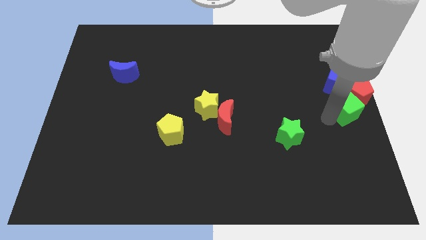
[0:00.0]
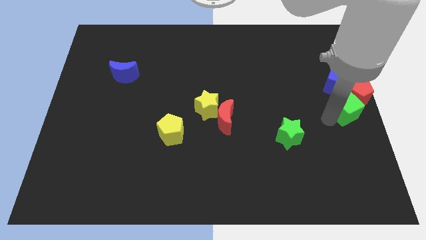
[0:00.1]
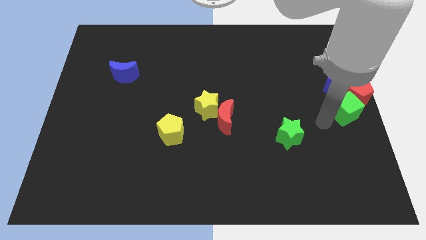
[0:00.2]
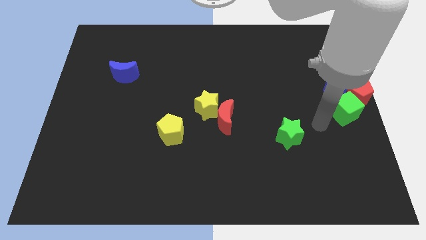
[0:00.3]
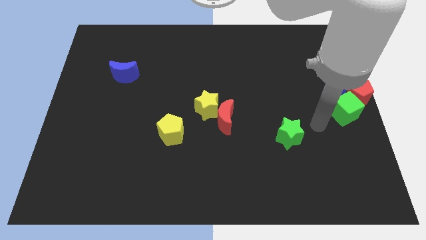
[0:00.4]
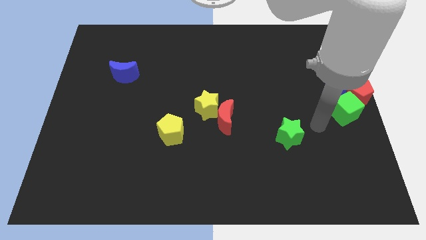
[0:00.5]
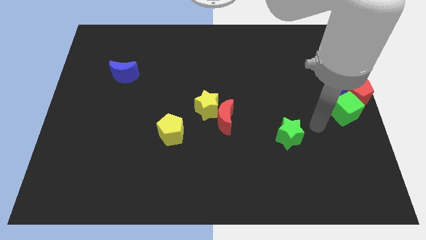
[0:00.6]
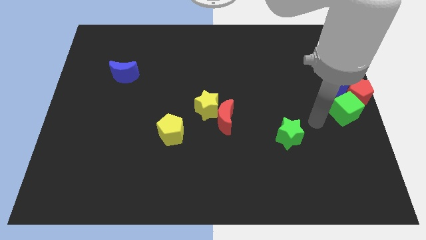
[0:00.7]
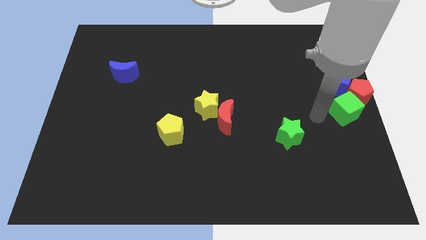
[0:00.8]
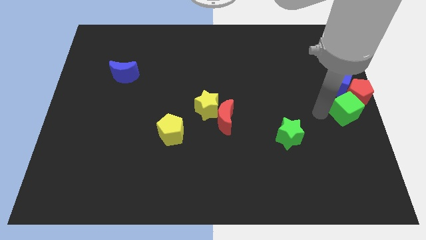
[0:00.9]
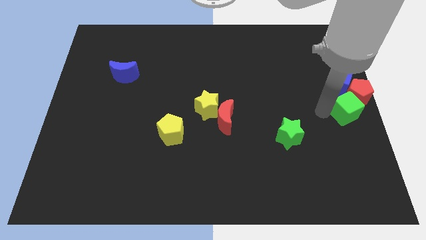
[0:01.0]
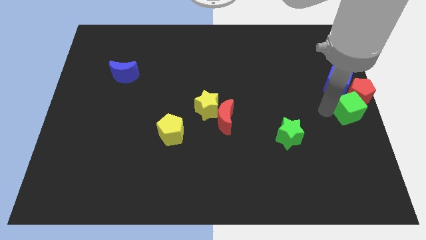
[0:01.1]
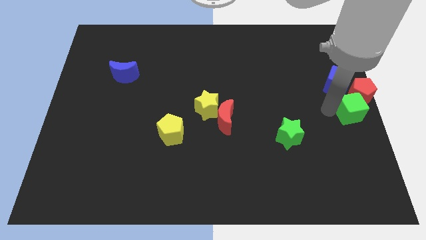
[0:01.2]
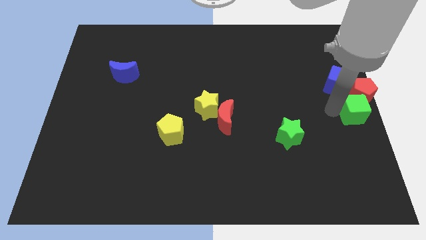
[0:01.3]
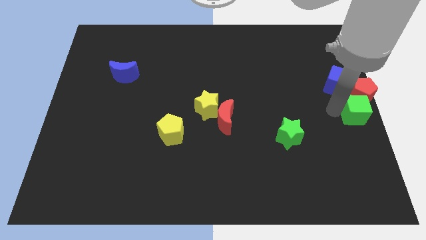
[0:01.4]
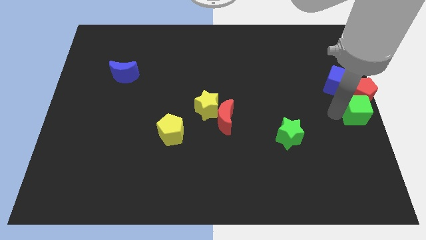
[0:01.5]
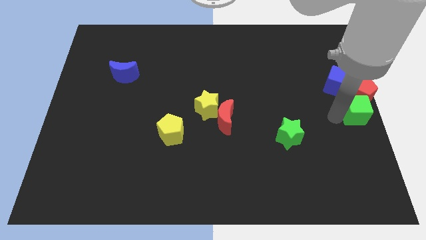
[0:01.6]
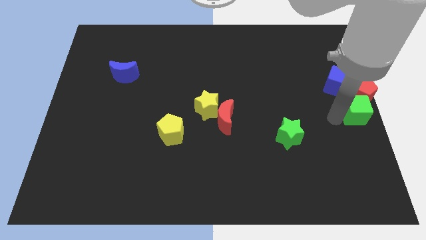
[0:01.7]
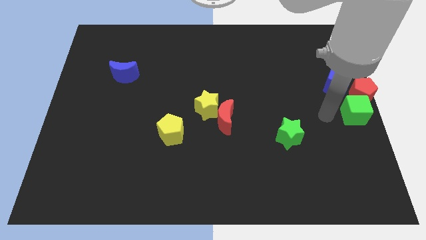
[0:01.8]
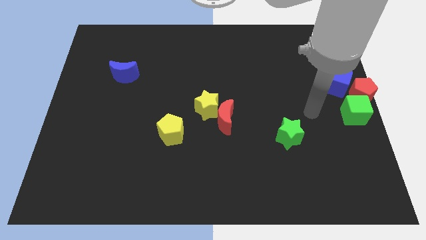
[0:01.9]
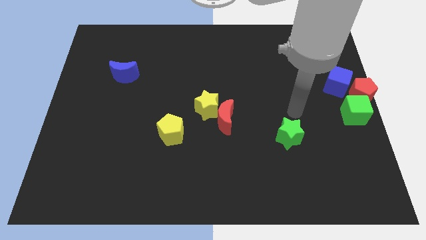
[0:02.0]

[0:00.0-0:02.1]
move green cube close to red pentagon

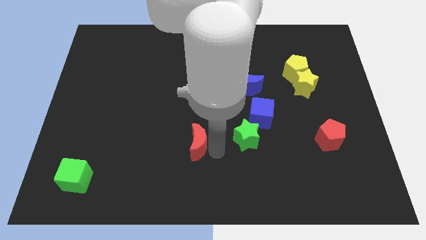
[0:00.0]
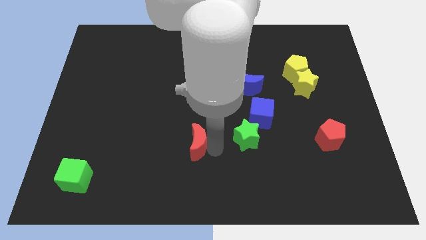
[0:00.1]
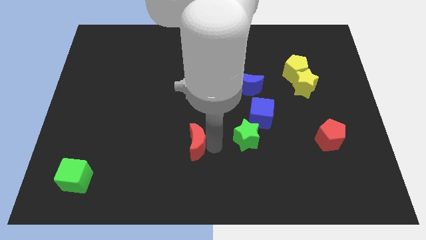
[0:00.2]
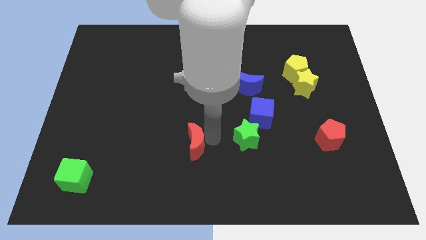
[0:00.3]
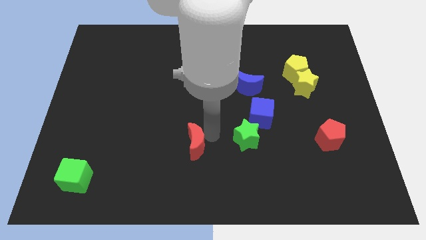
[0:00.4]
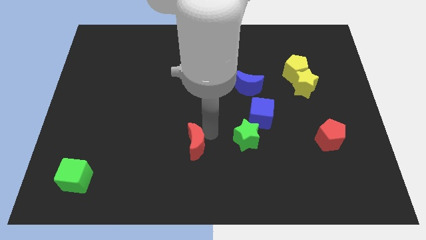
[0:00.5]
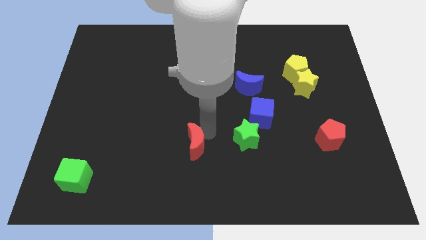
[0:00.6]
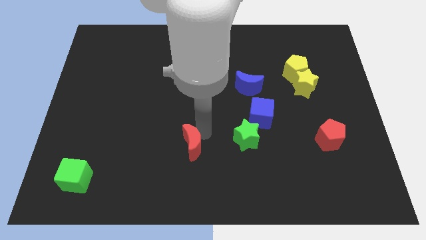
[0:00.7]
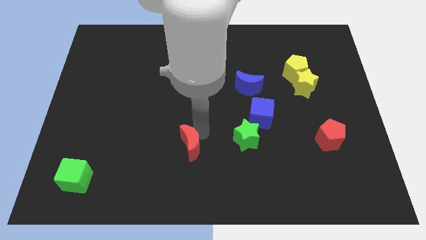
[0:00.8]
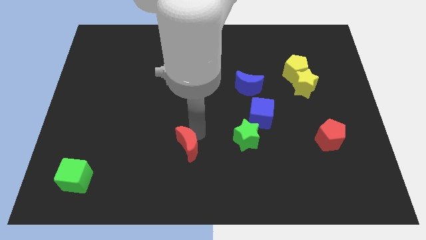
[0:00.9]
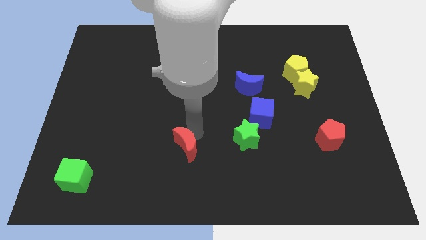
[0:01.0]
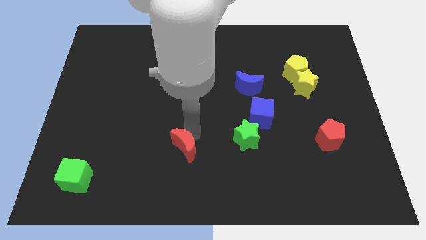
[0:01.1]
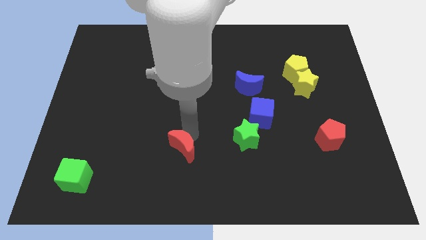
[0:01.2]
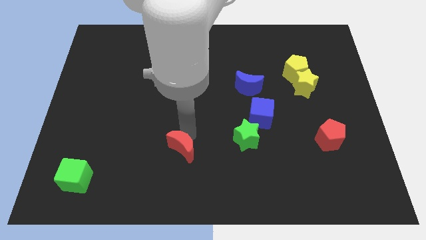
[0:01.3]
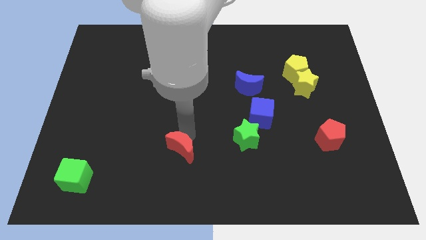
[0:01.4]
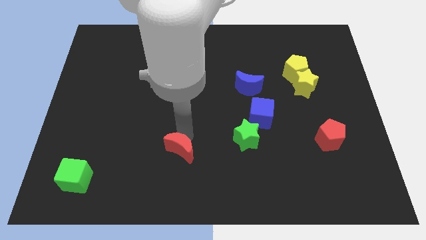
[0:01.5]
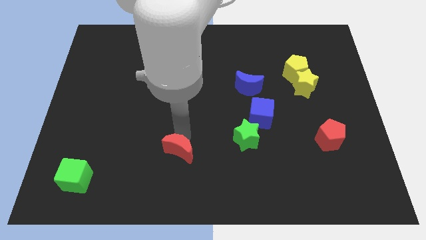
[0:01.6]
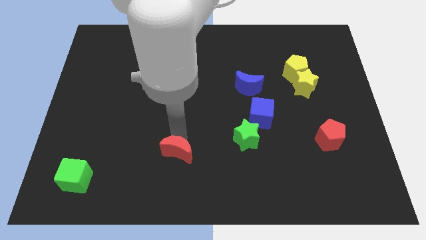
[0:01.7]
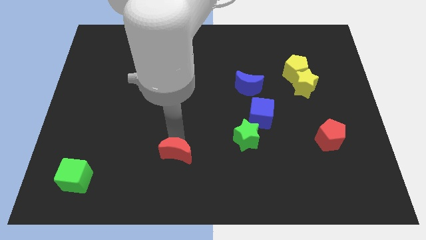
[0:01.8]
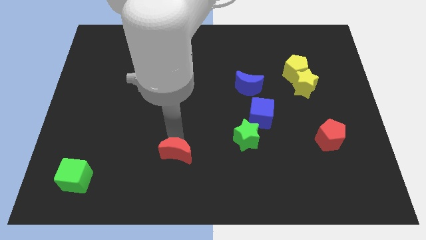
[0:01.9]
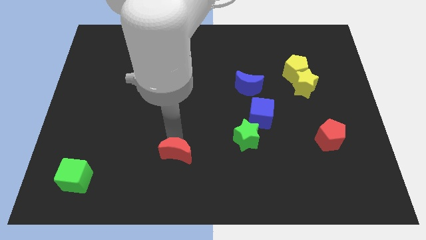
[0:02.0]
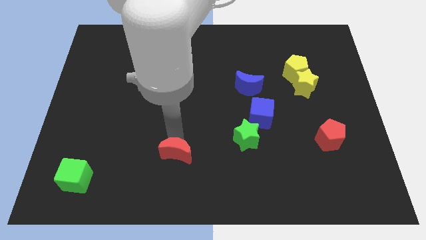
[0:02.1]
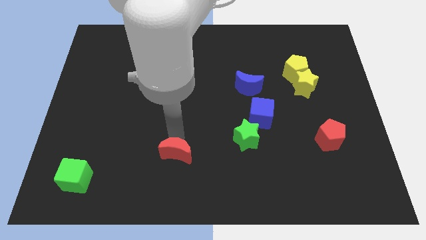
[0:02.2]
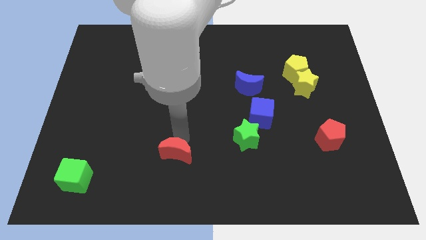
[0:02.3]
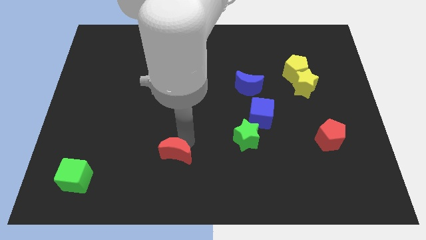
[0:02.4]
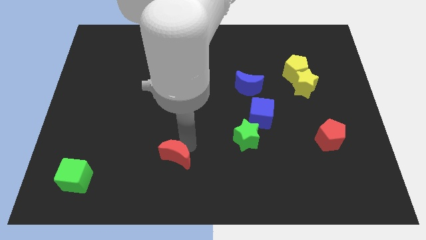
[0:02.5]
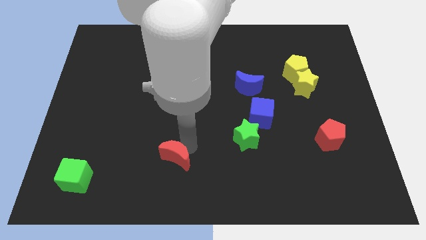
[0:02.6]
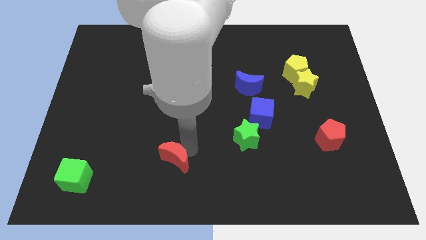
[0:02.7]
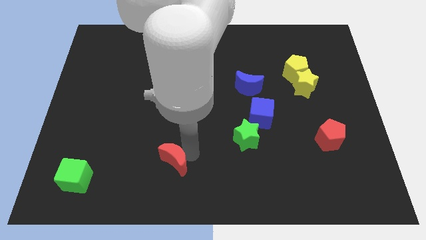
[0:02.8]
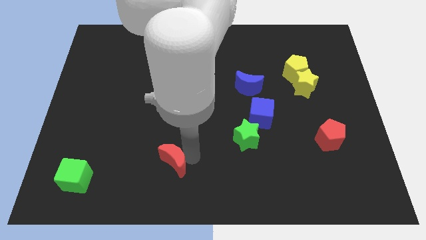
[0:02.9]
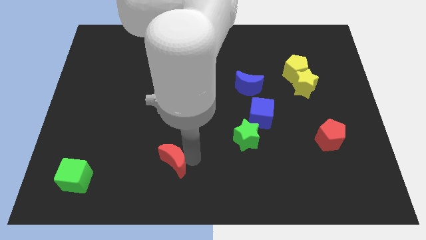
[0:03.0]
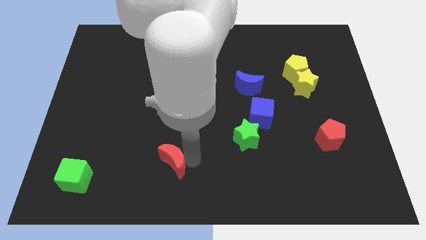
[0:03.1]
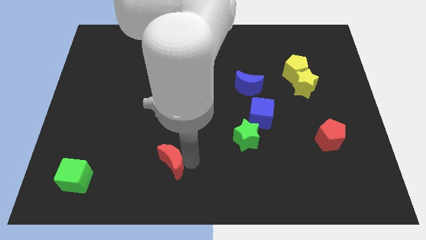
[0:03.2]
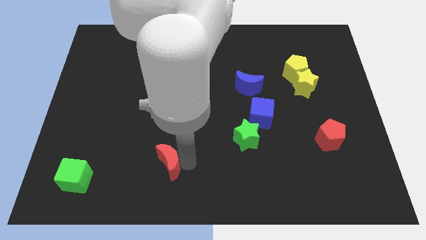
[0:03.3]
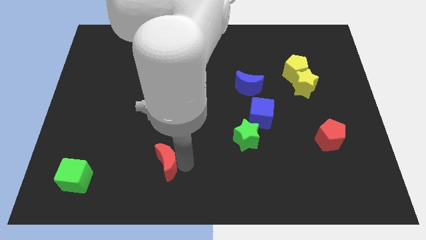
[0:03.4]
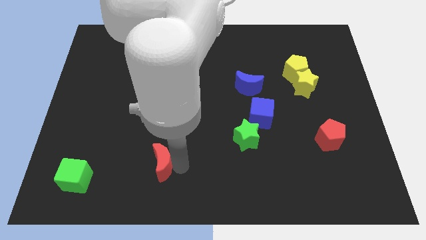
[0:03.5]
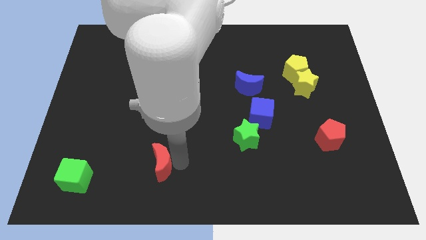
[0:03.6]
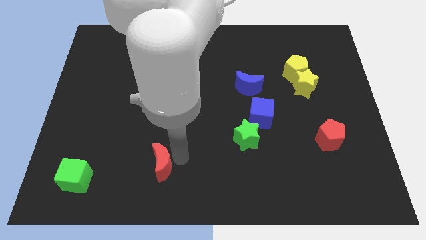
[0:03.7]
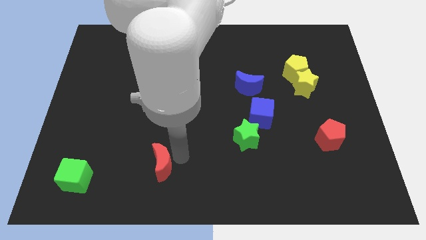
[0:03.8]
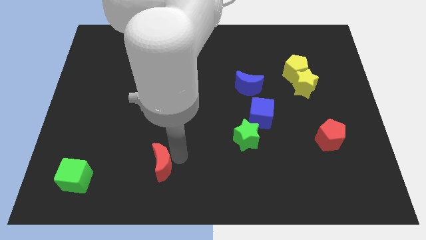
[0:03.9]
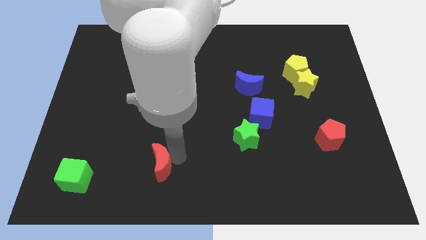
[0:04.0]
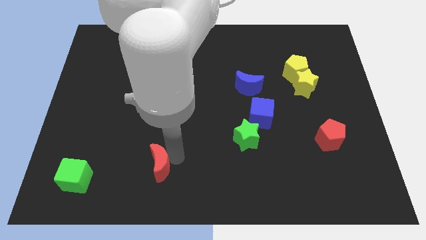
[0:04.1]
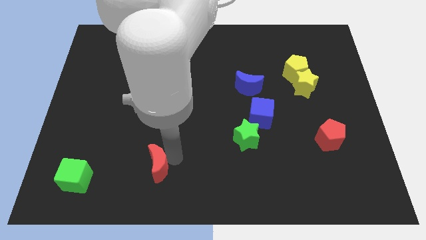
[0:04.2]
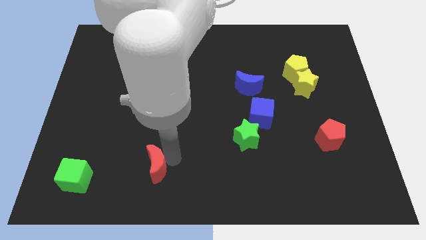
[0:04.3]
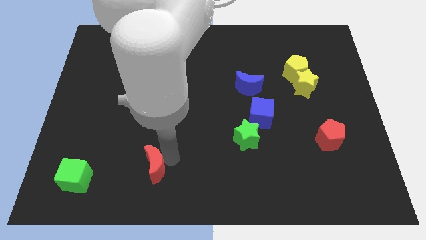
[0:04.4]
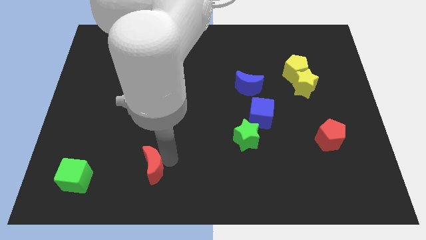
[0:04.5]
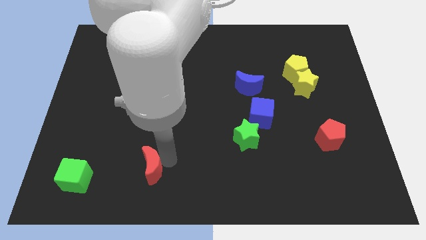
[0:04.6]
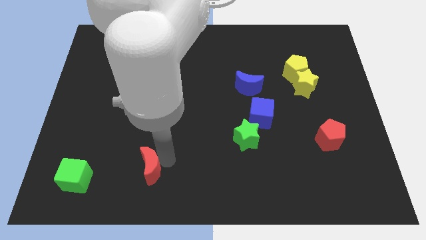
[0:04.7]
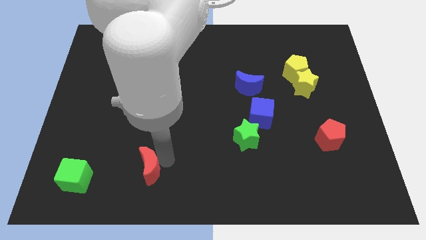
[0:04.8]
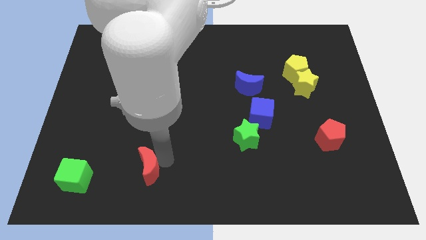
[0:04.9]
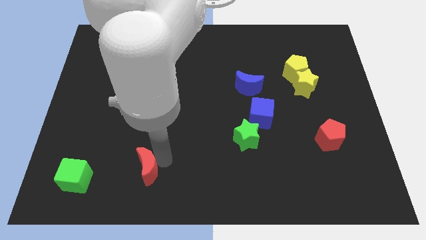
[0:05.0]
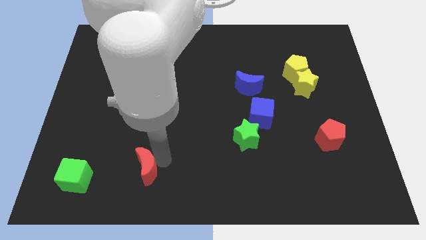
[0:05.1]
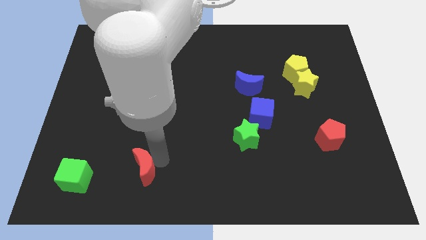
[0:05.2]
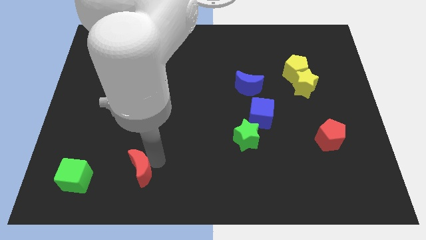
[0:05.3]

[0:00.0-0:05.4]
move red crescent towards the green cube

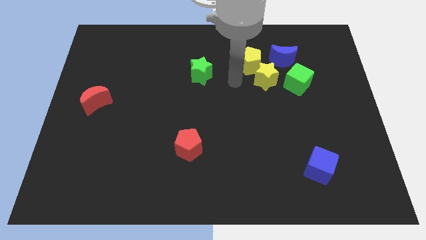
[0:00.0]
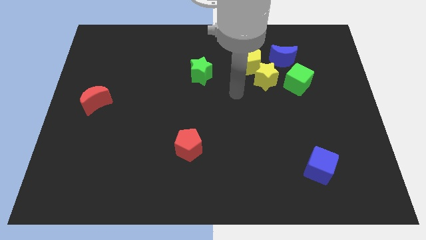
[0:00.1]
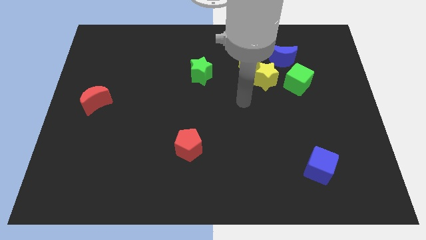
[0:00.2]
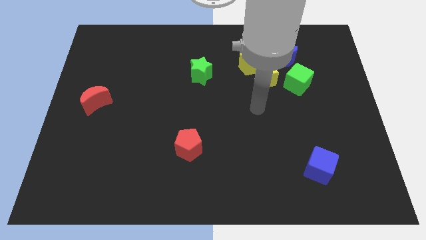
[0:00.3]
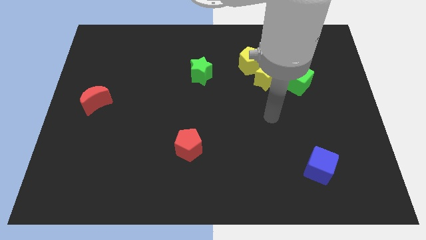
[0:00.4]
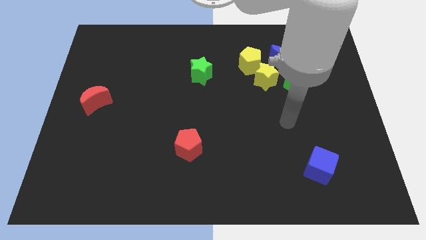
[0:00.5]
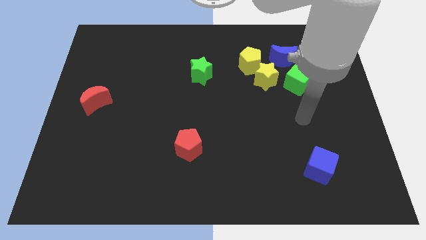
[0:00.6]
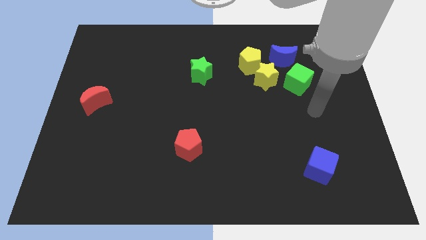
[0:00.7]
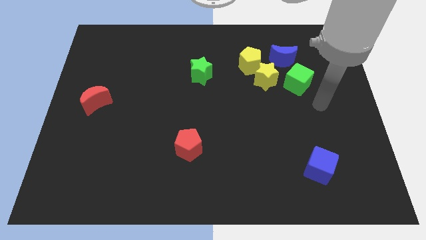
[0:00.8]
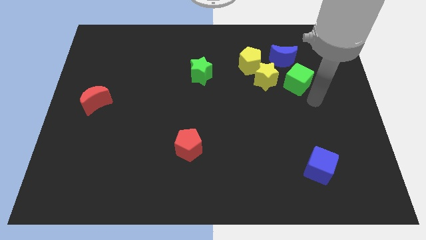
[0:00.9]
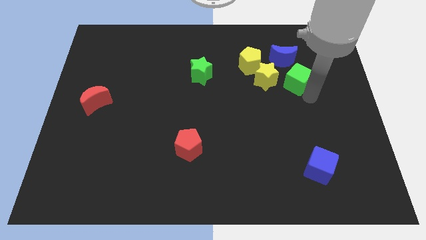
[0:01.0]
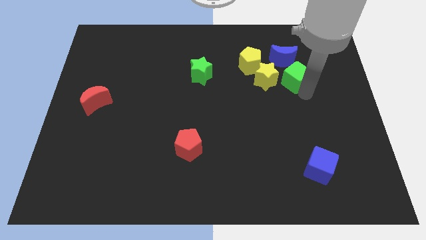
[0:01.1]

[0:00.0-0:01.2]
touch the bottom of green cube

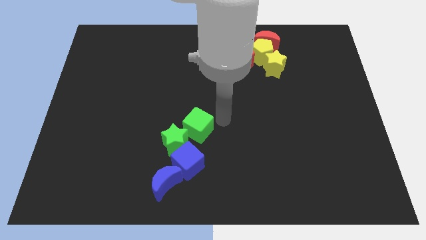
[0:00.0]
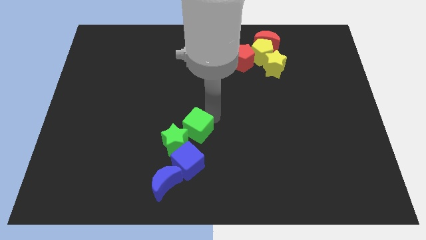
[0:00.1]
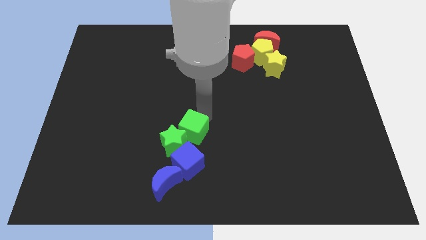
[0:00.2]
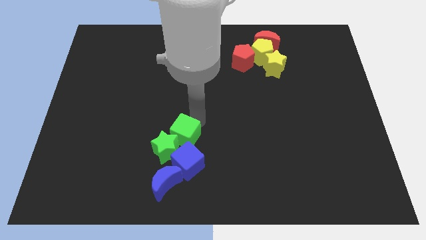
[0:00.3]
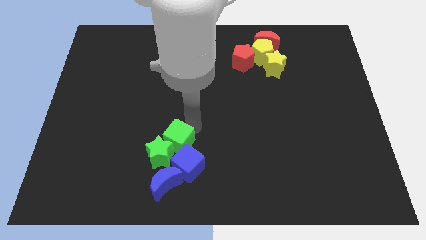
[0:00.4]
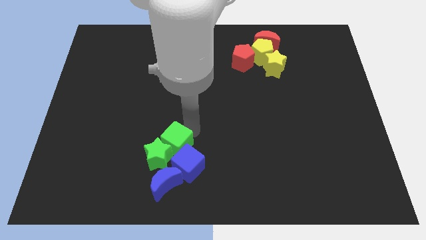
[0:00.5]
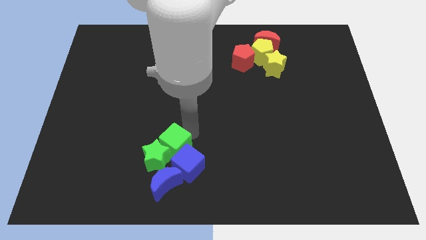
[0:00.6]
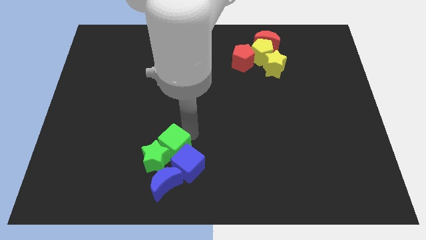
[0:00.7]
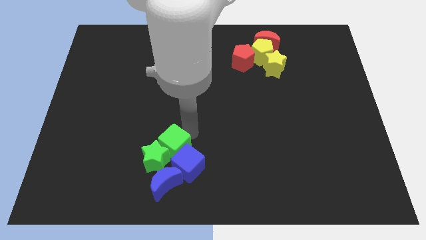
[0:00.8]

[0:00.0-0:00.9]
push green cube towards green star
